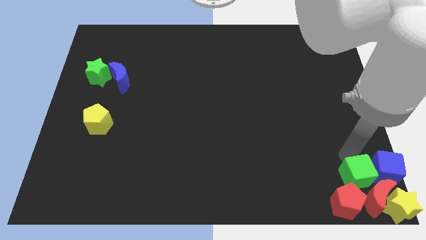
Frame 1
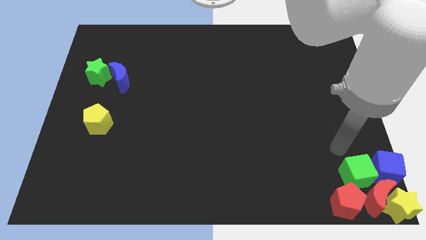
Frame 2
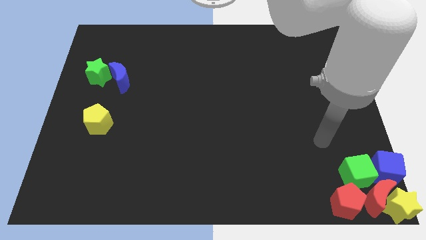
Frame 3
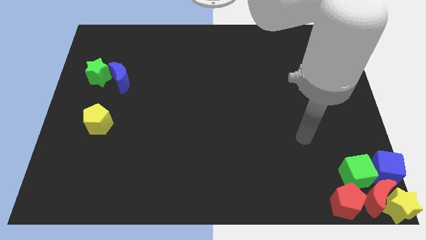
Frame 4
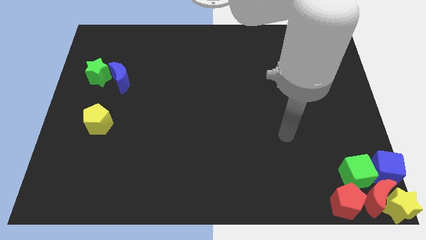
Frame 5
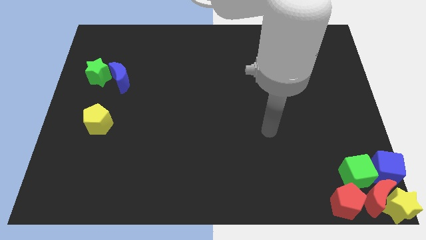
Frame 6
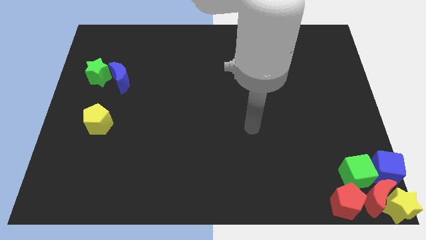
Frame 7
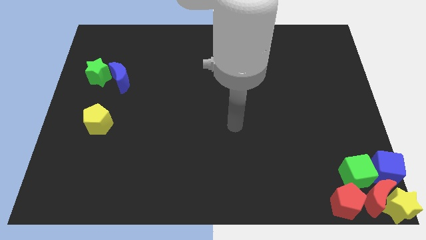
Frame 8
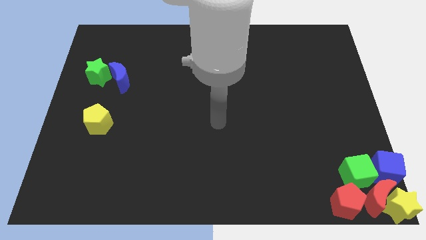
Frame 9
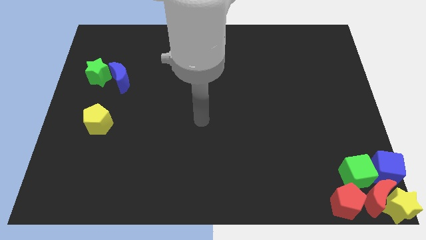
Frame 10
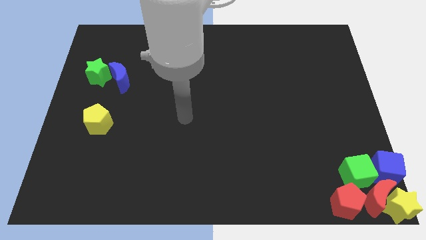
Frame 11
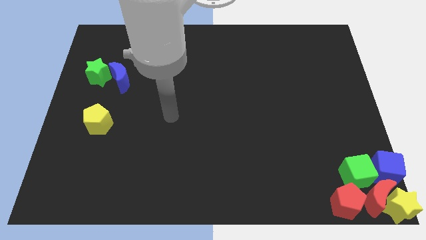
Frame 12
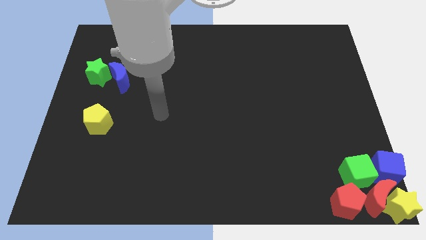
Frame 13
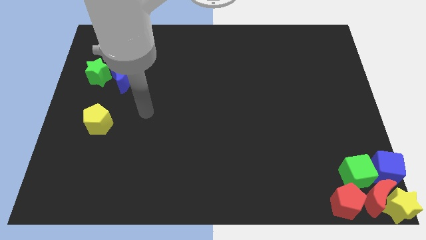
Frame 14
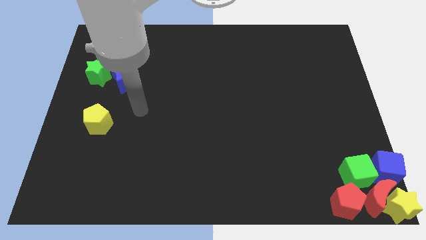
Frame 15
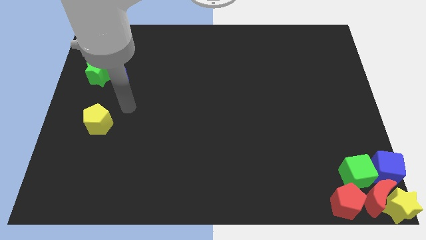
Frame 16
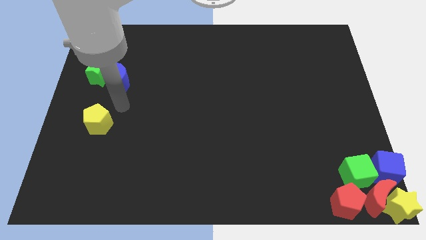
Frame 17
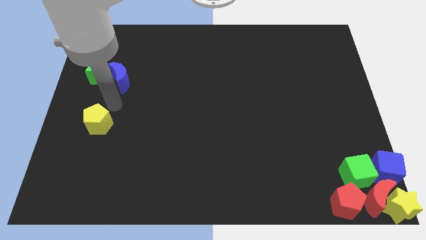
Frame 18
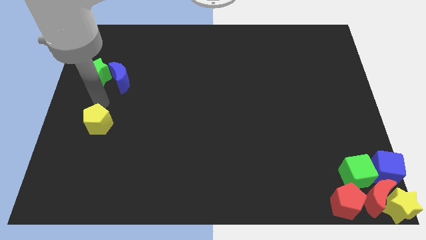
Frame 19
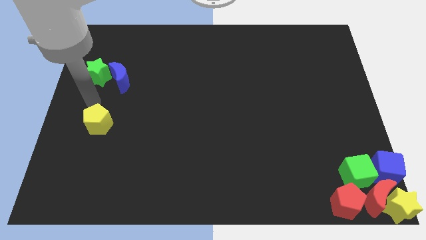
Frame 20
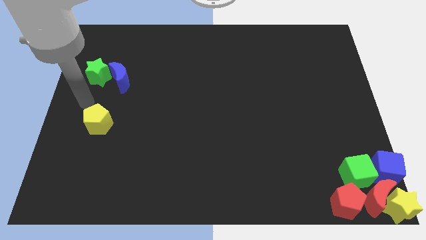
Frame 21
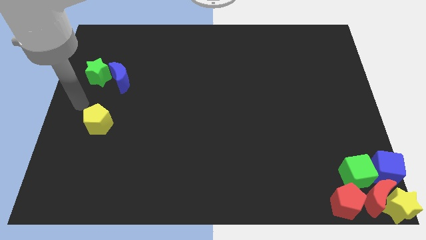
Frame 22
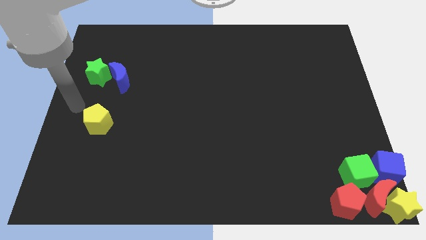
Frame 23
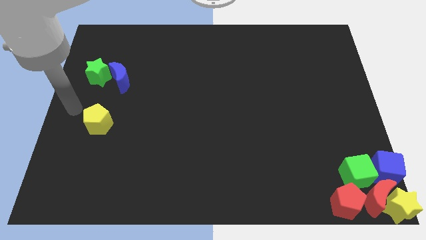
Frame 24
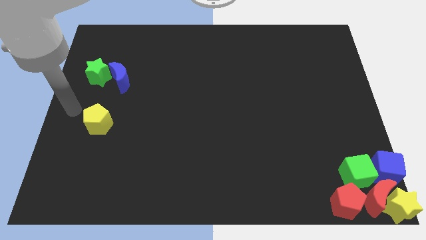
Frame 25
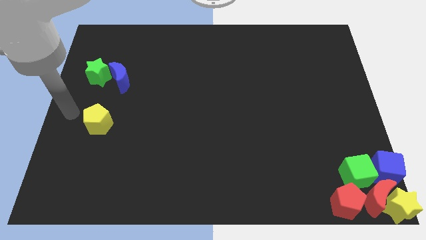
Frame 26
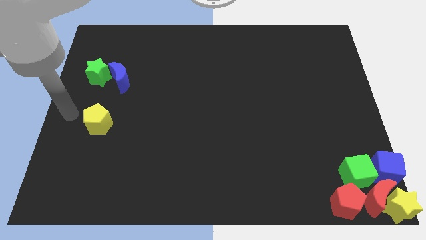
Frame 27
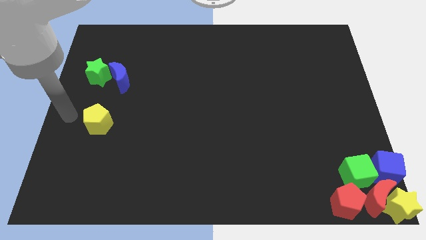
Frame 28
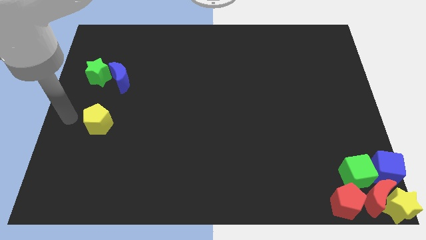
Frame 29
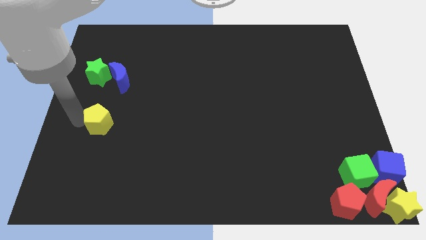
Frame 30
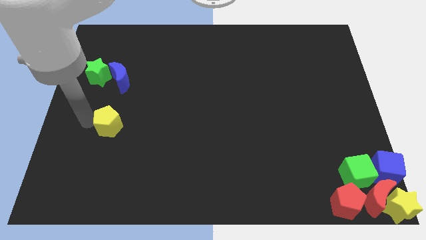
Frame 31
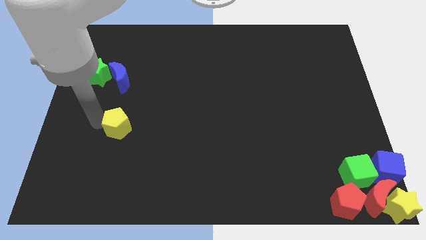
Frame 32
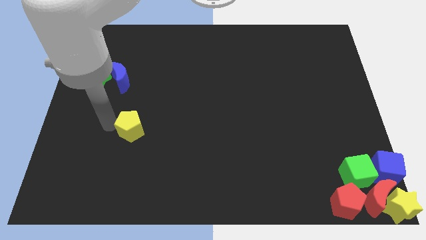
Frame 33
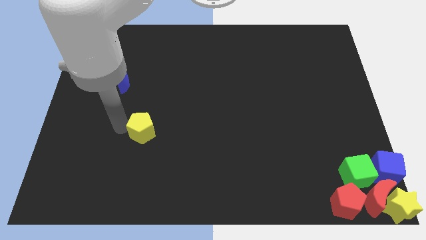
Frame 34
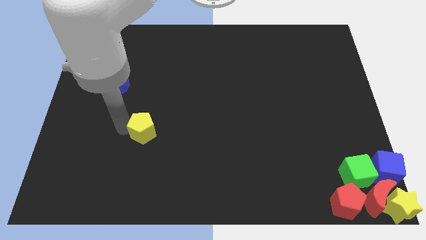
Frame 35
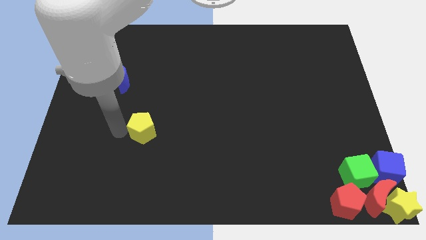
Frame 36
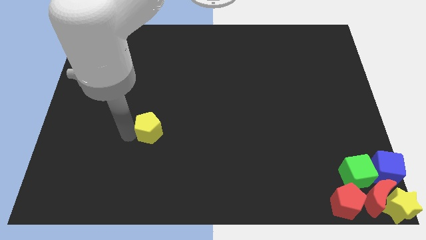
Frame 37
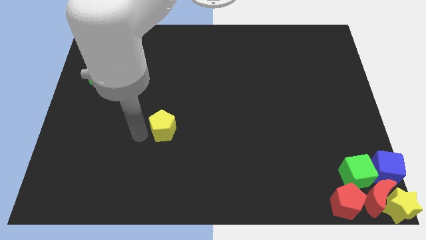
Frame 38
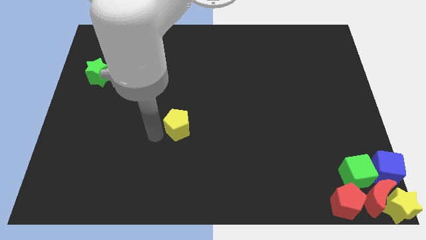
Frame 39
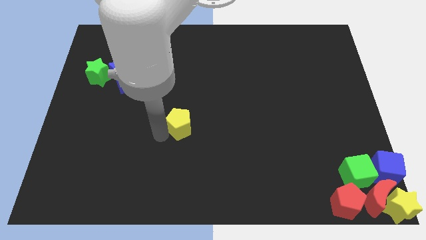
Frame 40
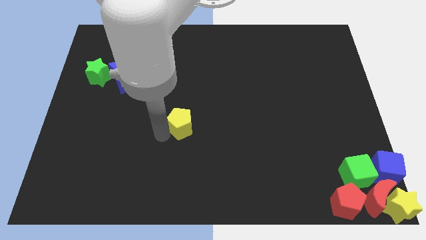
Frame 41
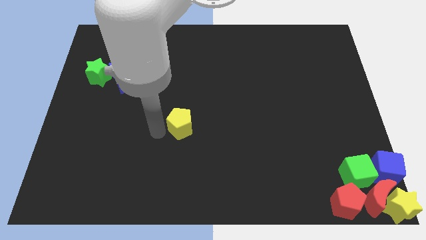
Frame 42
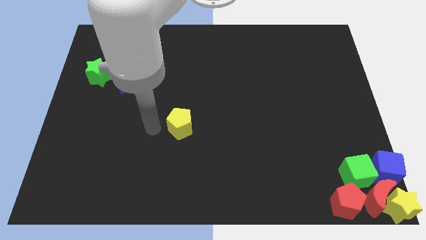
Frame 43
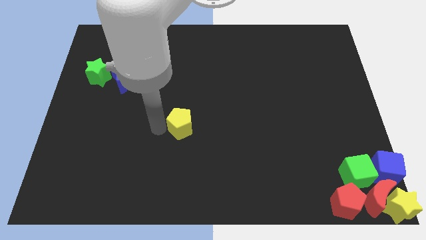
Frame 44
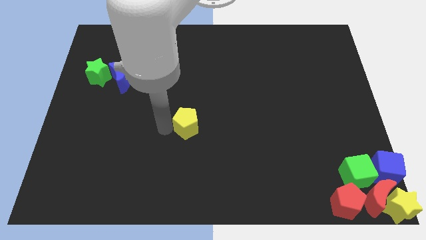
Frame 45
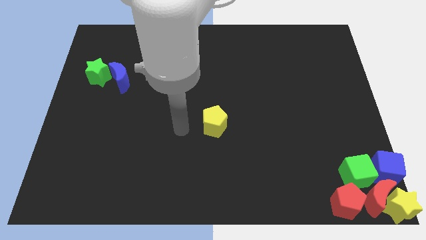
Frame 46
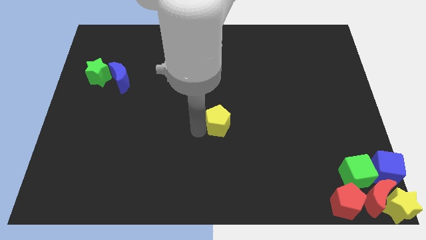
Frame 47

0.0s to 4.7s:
place the yellow pentagon at the center of the board

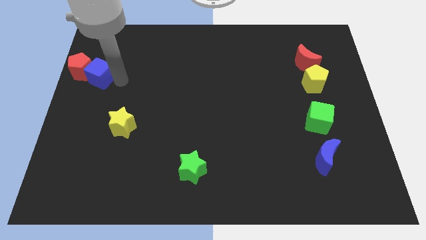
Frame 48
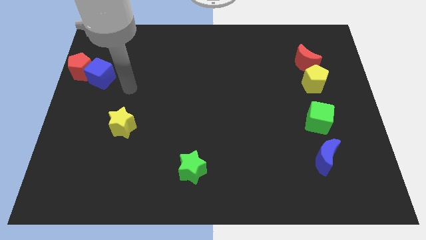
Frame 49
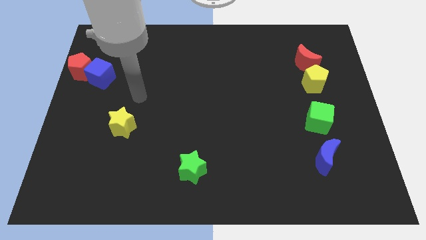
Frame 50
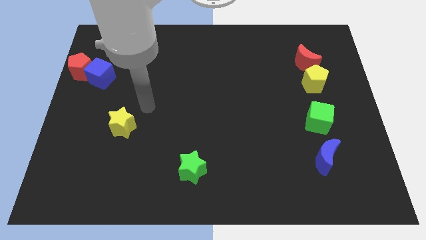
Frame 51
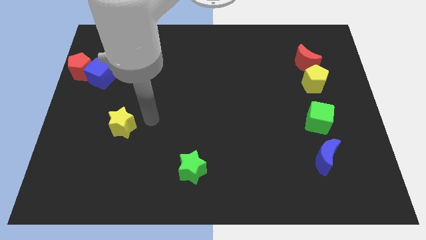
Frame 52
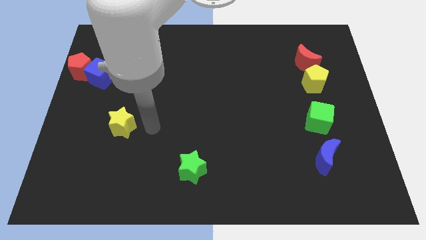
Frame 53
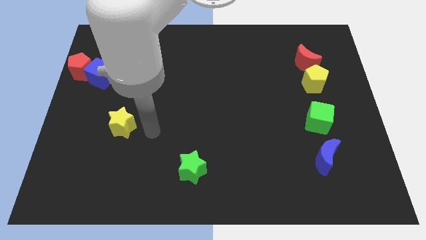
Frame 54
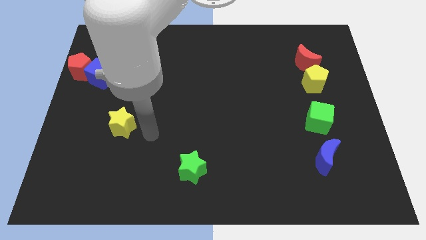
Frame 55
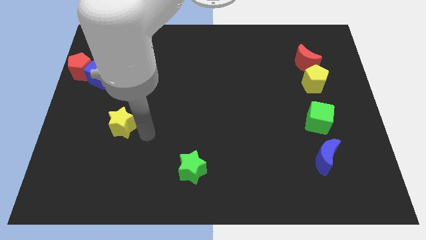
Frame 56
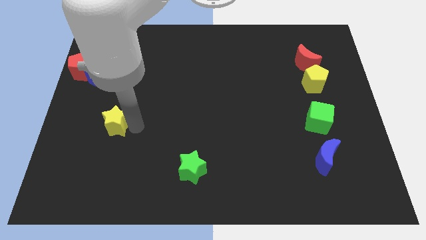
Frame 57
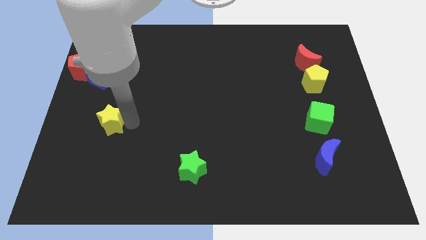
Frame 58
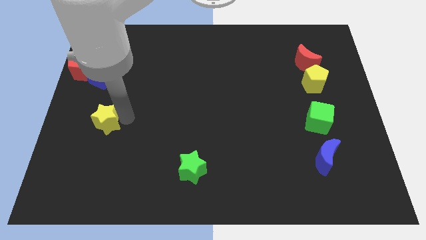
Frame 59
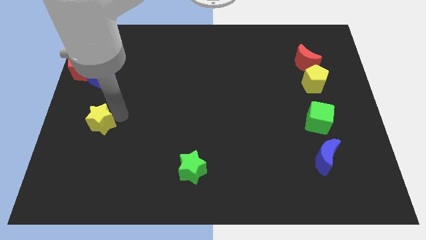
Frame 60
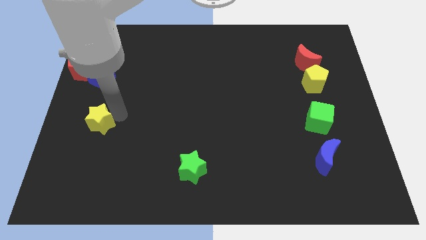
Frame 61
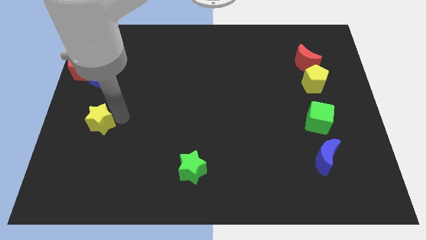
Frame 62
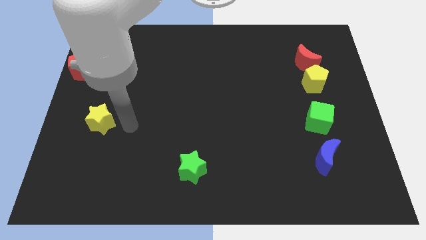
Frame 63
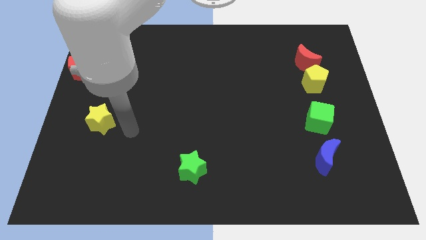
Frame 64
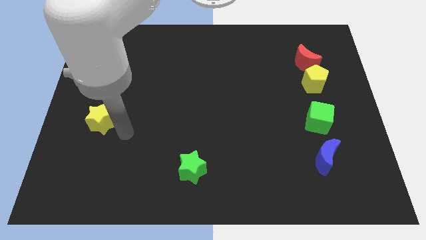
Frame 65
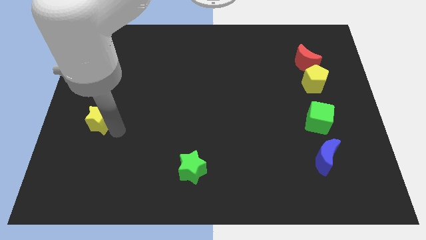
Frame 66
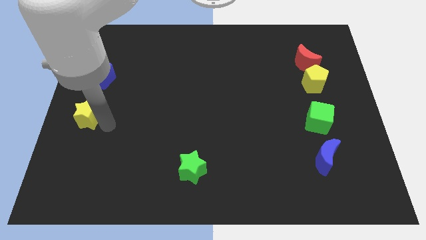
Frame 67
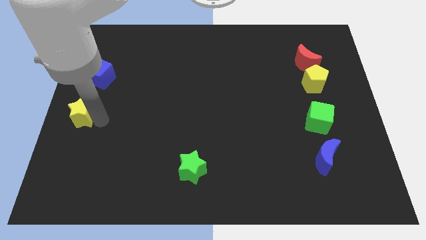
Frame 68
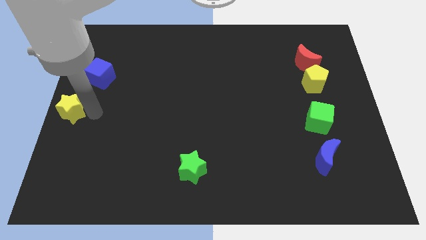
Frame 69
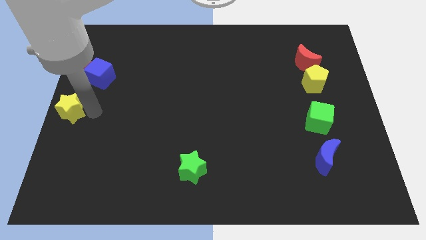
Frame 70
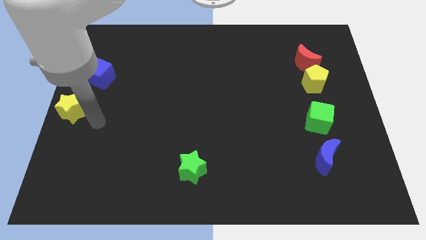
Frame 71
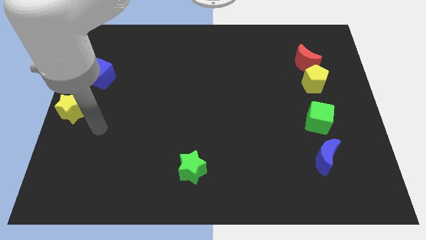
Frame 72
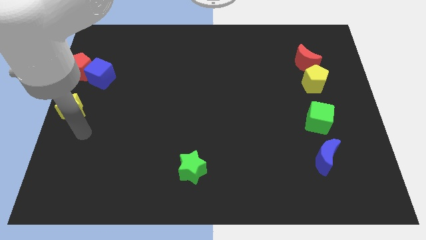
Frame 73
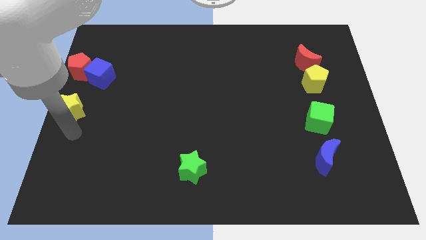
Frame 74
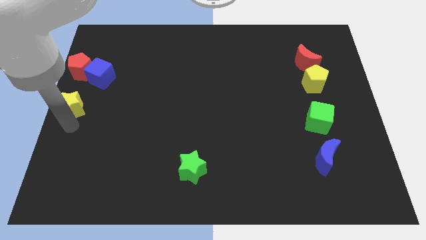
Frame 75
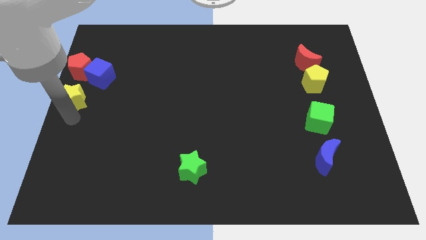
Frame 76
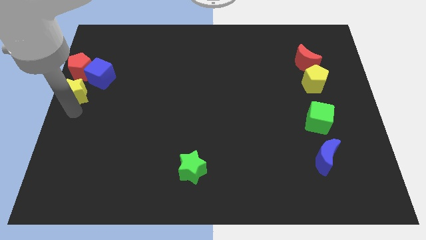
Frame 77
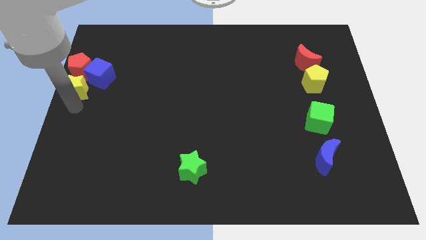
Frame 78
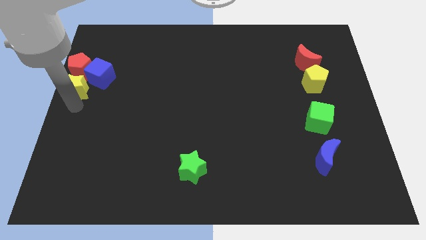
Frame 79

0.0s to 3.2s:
move the yellow star to the left center of the board

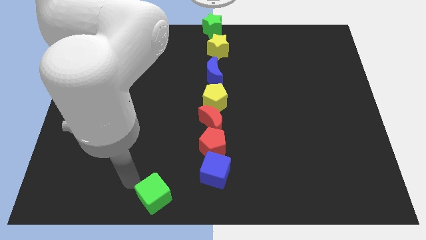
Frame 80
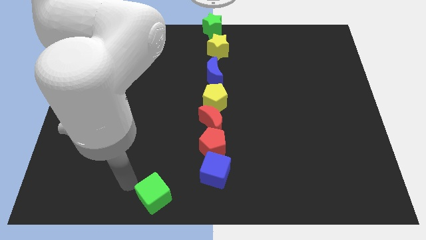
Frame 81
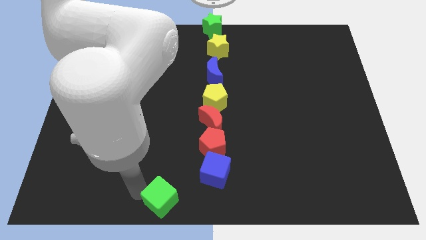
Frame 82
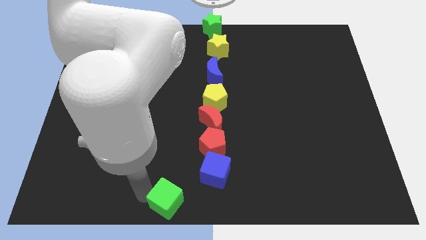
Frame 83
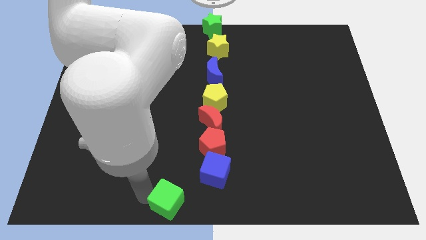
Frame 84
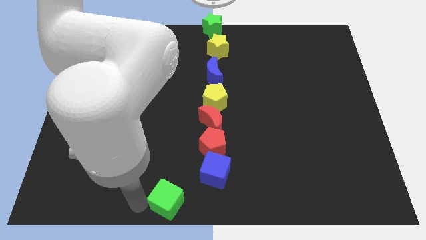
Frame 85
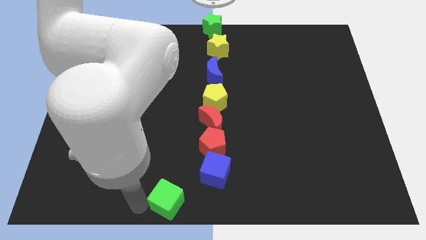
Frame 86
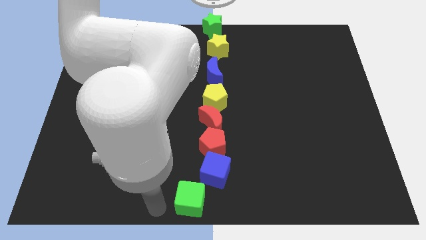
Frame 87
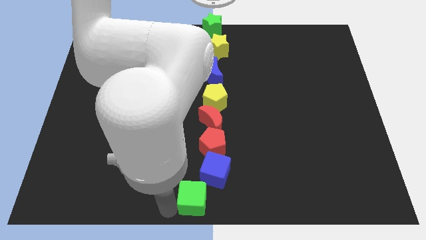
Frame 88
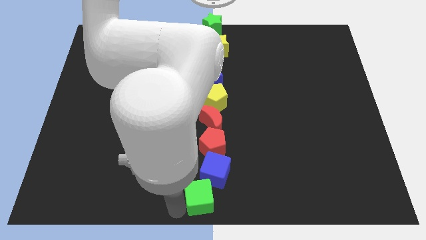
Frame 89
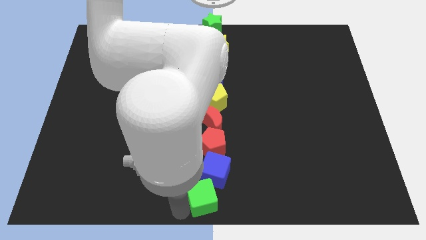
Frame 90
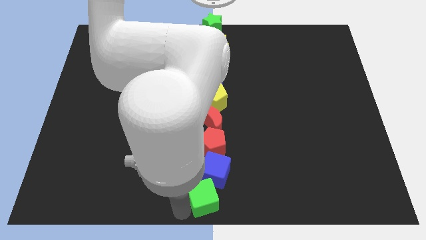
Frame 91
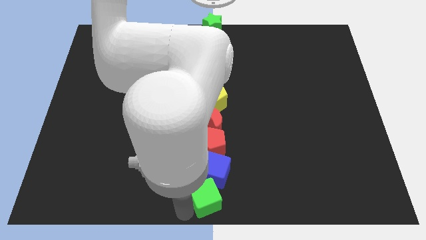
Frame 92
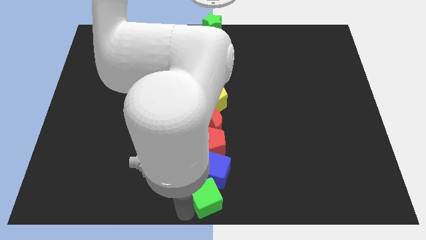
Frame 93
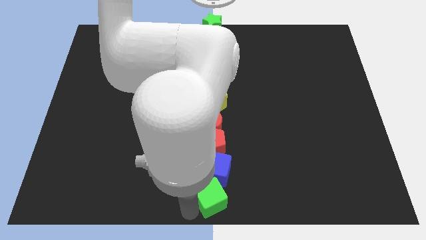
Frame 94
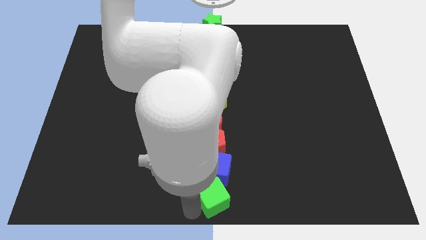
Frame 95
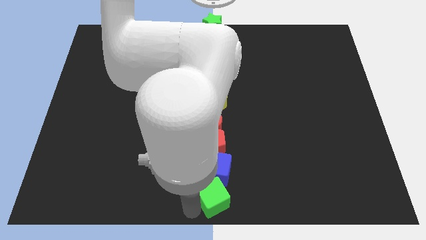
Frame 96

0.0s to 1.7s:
push the green cube under to the blue cube
